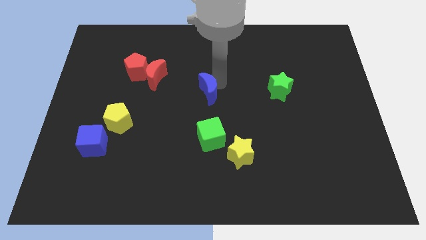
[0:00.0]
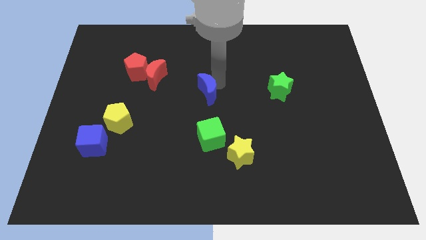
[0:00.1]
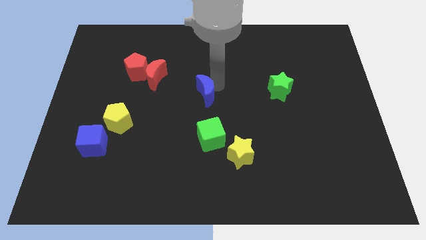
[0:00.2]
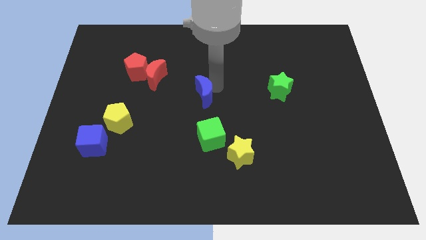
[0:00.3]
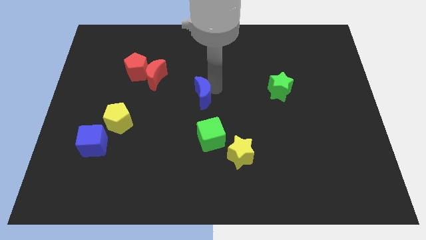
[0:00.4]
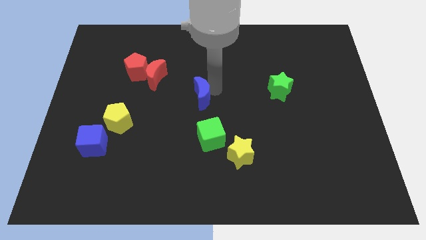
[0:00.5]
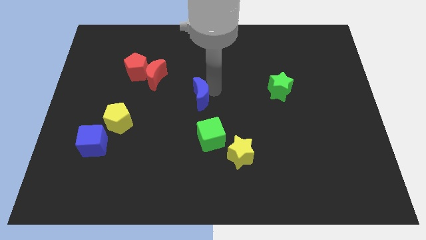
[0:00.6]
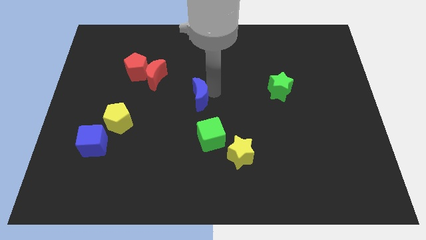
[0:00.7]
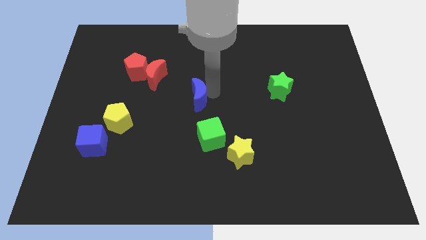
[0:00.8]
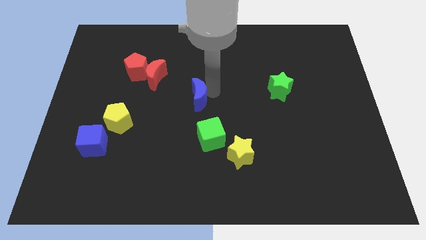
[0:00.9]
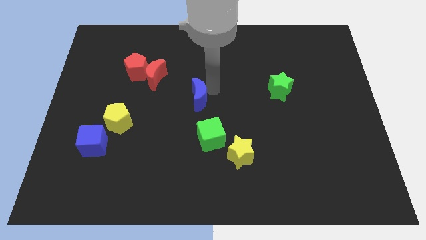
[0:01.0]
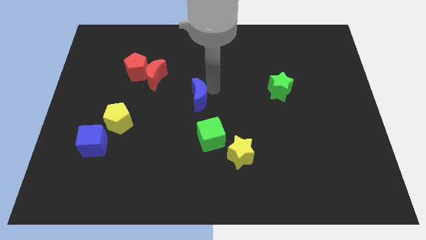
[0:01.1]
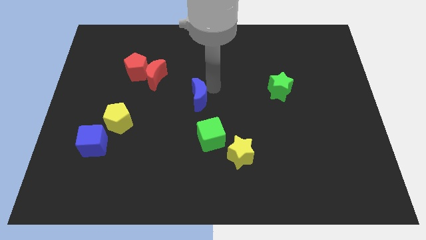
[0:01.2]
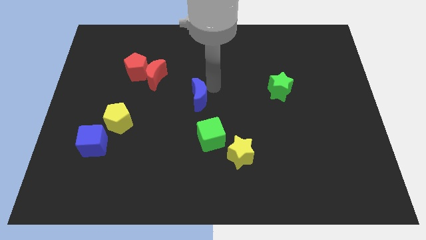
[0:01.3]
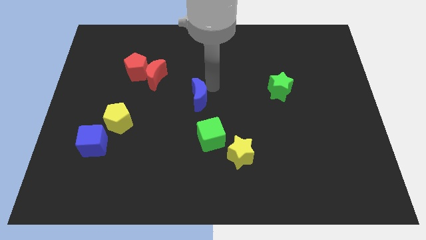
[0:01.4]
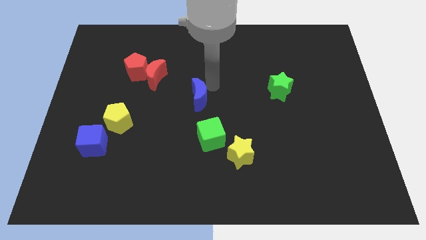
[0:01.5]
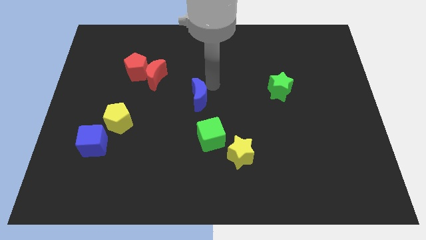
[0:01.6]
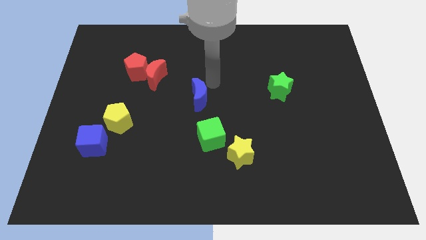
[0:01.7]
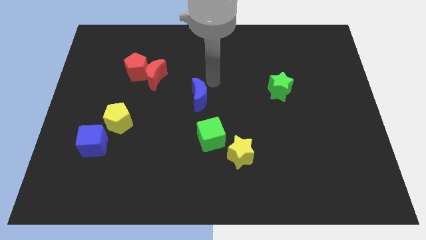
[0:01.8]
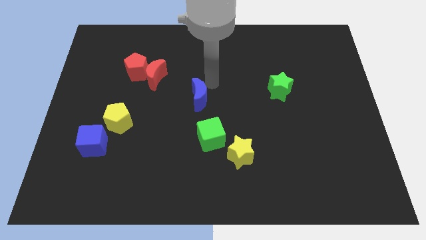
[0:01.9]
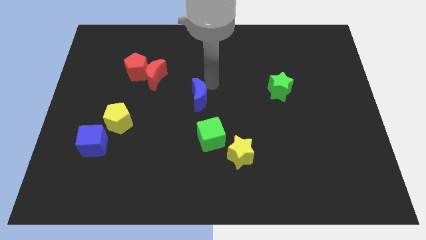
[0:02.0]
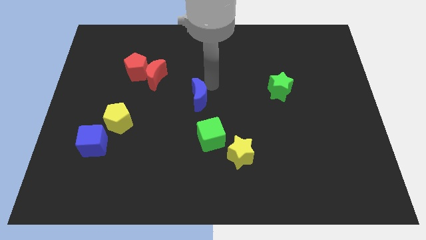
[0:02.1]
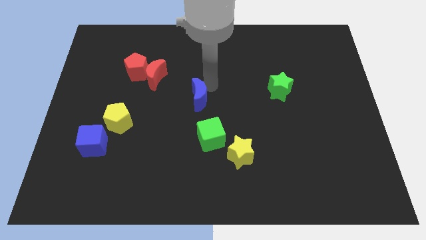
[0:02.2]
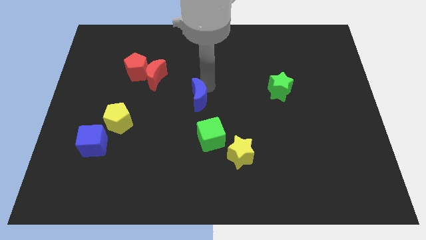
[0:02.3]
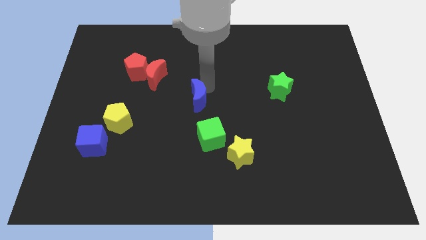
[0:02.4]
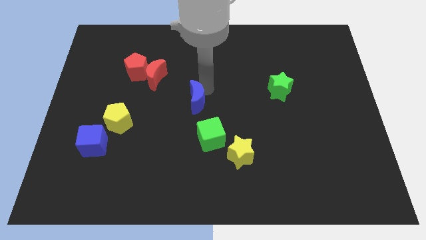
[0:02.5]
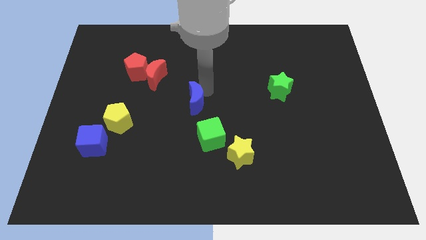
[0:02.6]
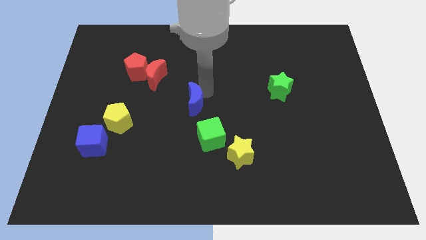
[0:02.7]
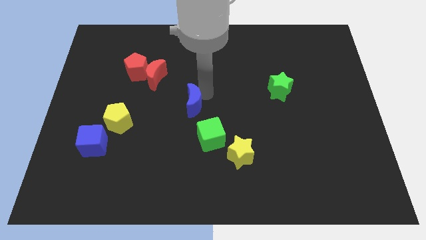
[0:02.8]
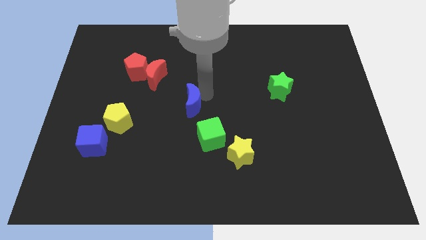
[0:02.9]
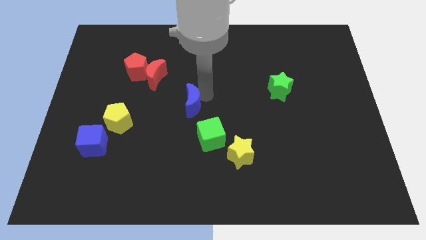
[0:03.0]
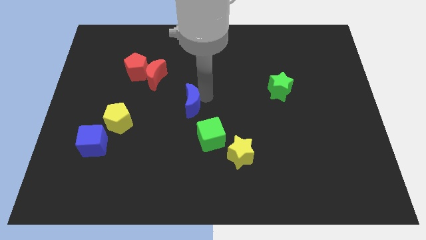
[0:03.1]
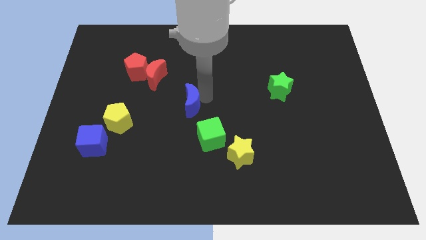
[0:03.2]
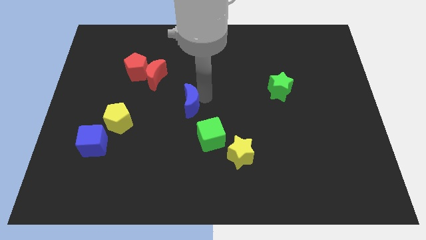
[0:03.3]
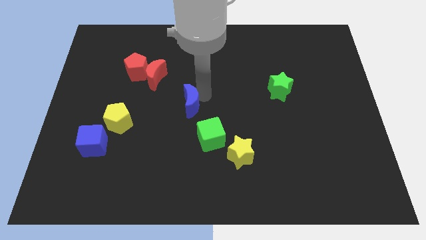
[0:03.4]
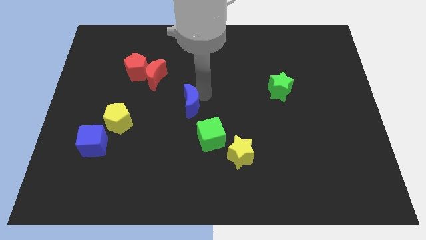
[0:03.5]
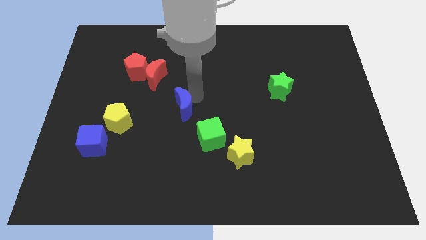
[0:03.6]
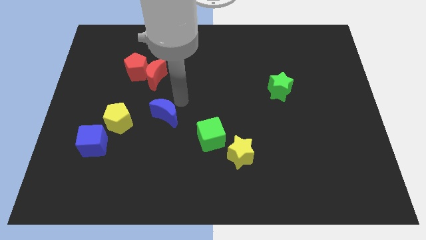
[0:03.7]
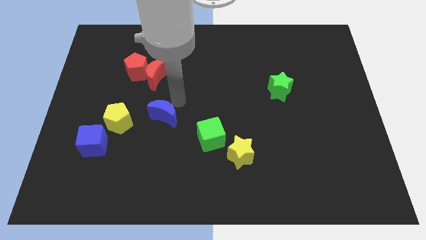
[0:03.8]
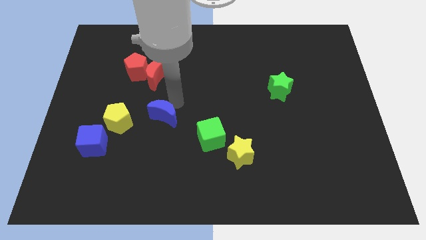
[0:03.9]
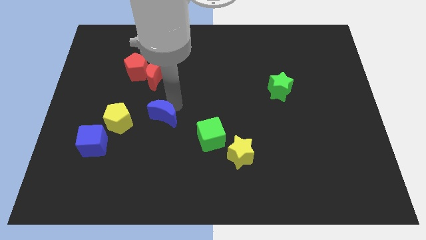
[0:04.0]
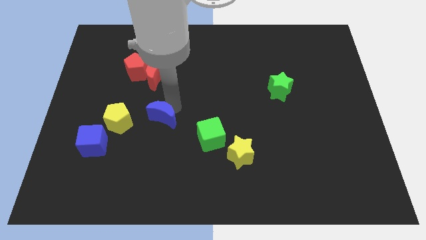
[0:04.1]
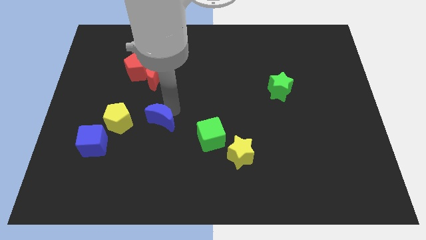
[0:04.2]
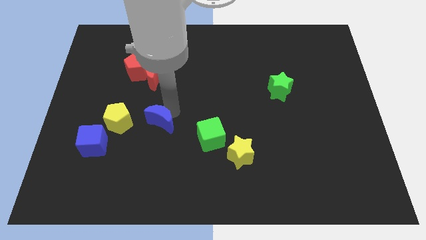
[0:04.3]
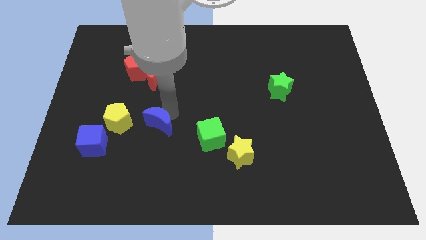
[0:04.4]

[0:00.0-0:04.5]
push blue crescent towards yellow pentagon

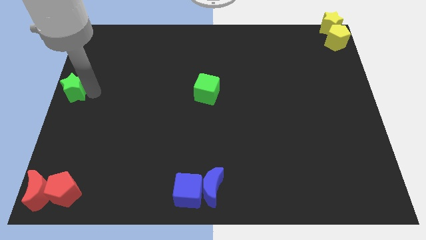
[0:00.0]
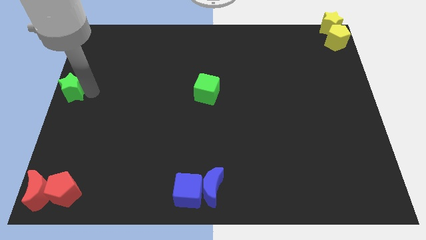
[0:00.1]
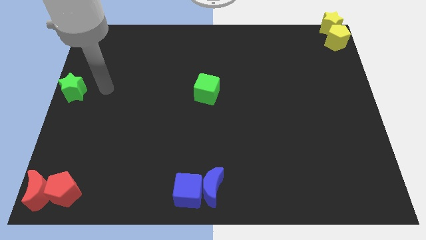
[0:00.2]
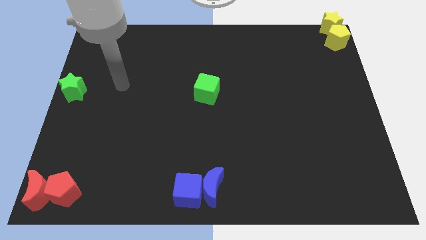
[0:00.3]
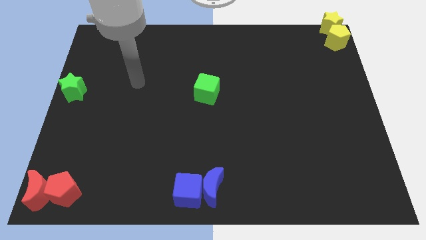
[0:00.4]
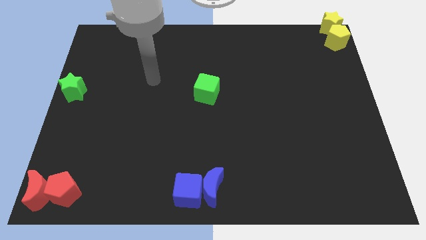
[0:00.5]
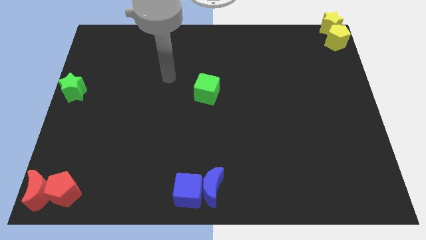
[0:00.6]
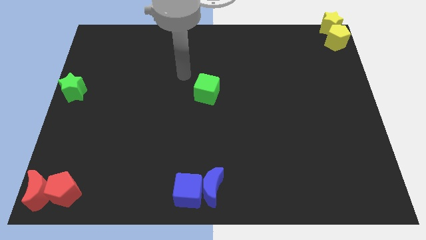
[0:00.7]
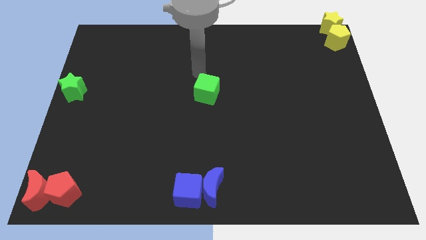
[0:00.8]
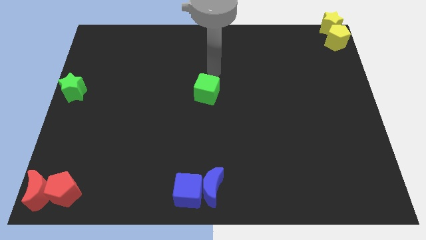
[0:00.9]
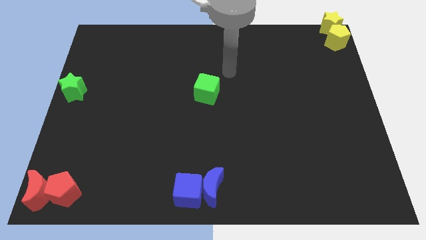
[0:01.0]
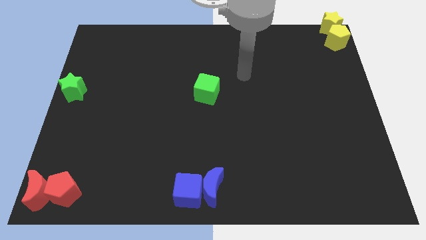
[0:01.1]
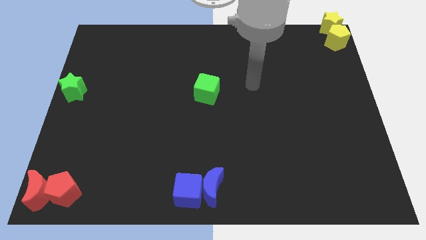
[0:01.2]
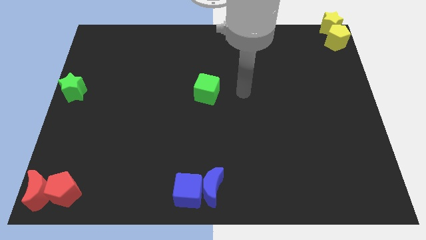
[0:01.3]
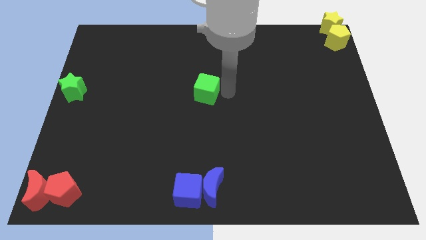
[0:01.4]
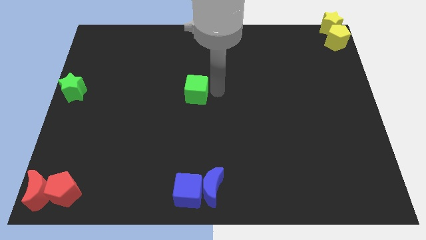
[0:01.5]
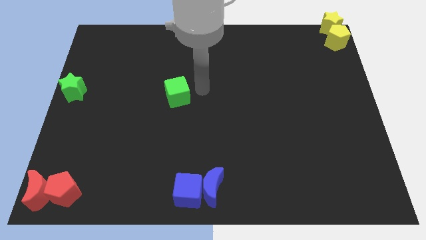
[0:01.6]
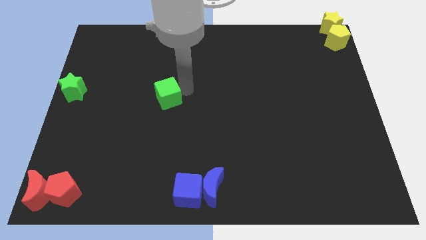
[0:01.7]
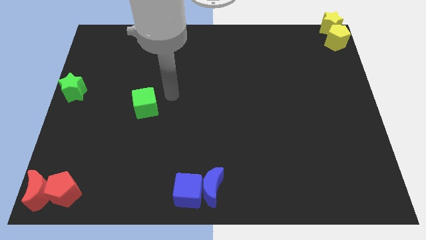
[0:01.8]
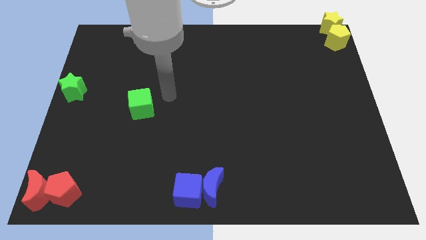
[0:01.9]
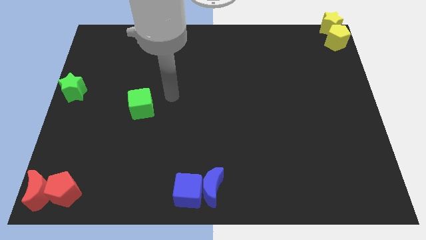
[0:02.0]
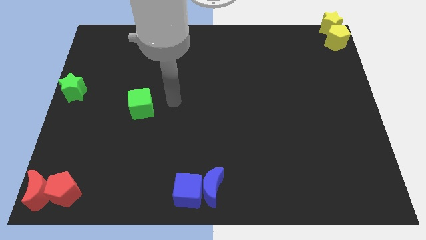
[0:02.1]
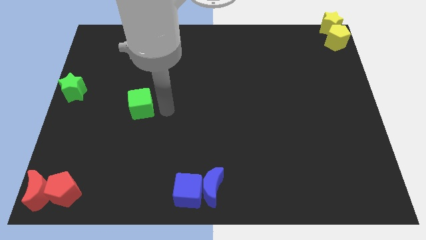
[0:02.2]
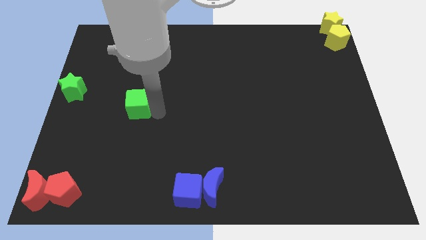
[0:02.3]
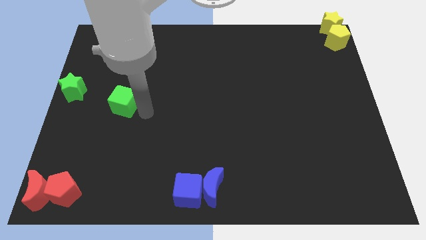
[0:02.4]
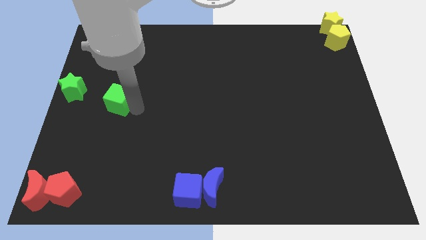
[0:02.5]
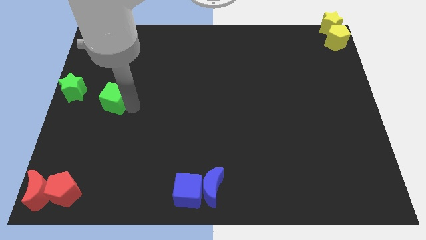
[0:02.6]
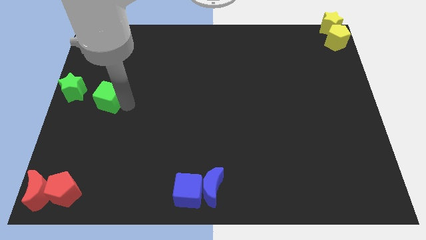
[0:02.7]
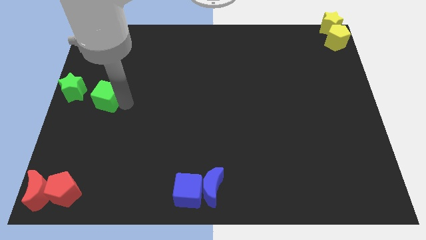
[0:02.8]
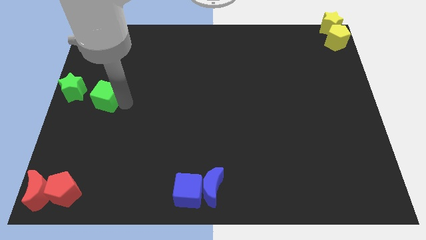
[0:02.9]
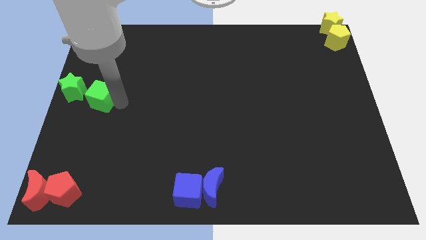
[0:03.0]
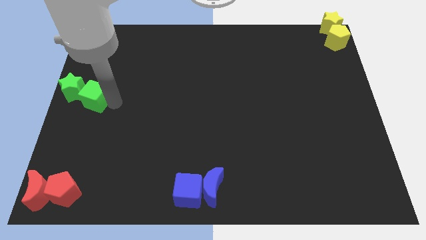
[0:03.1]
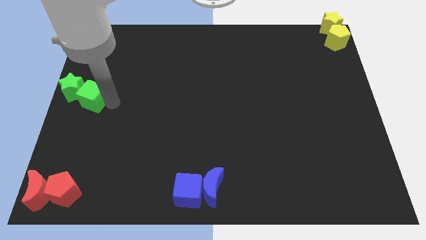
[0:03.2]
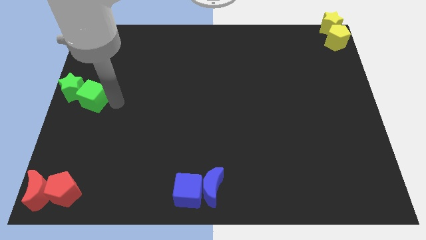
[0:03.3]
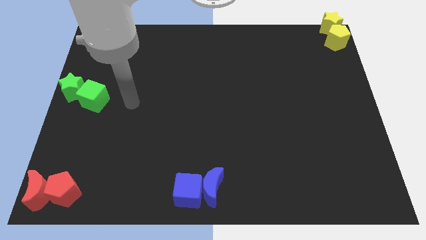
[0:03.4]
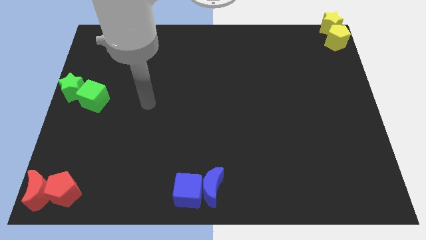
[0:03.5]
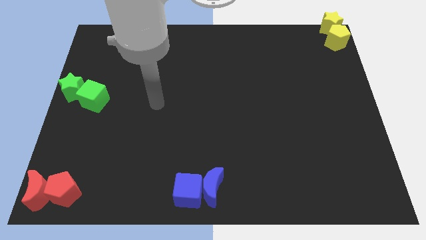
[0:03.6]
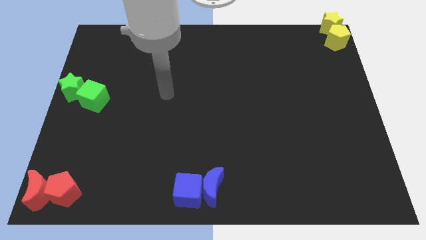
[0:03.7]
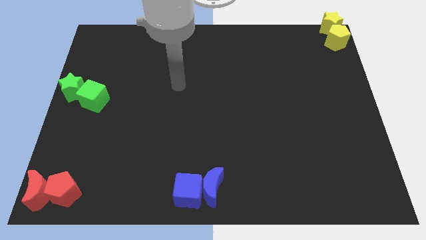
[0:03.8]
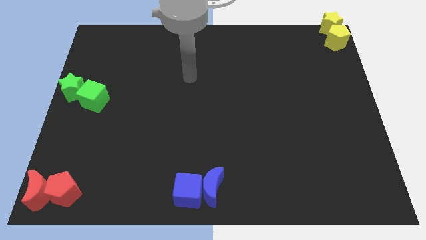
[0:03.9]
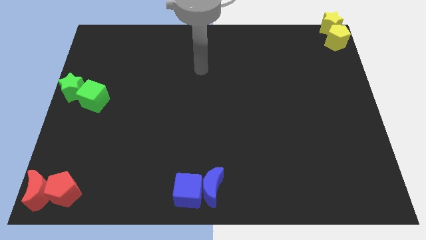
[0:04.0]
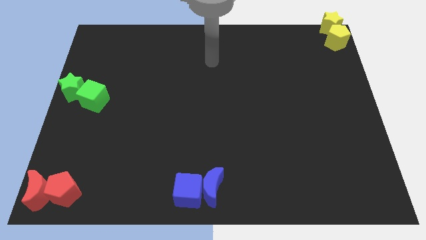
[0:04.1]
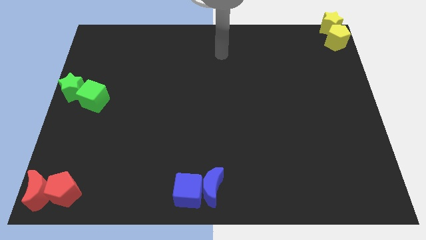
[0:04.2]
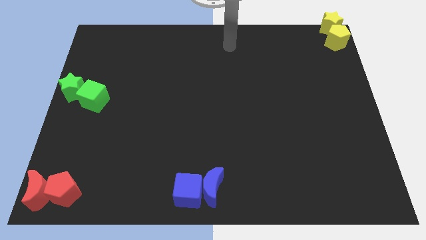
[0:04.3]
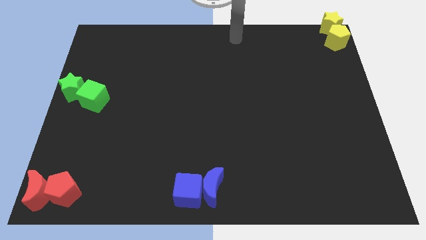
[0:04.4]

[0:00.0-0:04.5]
move the green cube towards the green star
